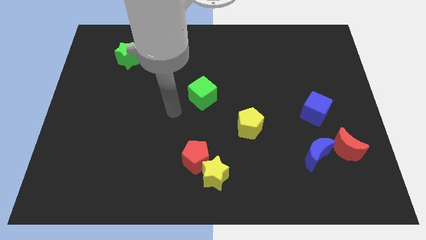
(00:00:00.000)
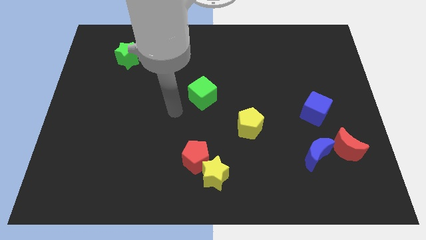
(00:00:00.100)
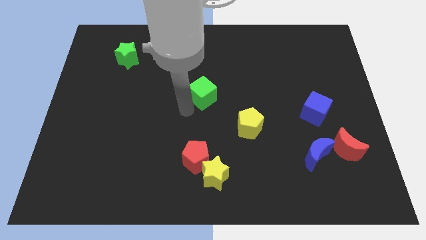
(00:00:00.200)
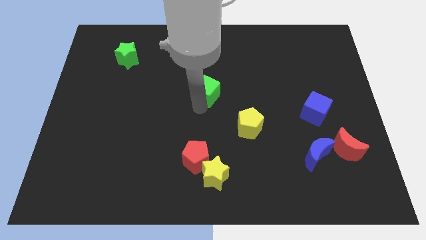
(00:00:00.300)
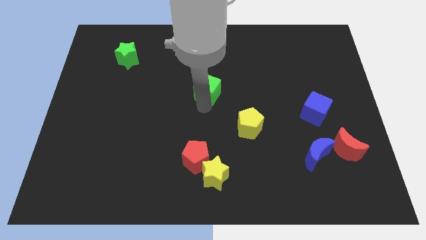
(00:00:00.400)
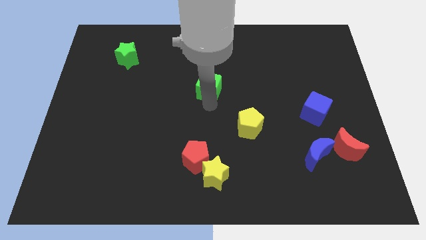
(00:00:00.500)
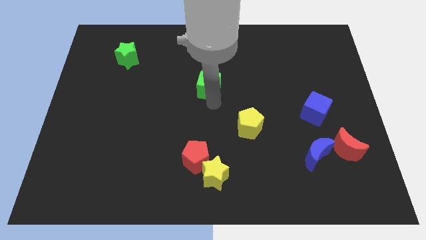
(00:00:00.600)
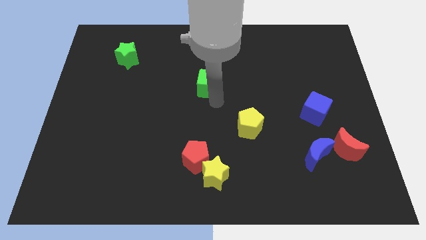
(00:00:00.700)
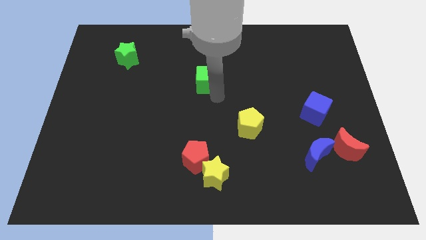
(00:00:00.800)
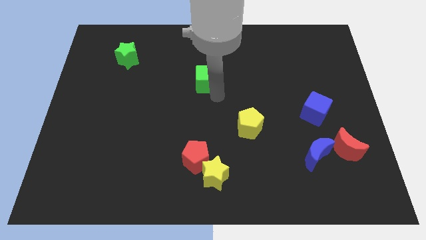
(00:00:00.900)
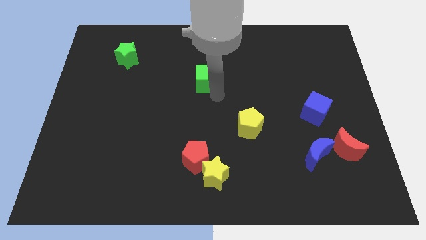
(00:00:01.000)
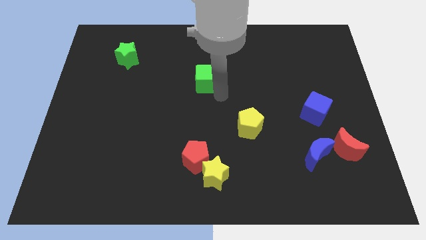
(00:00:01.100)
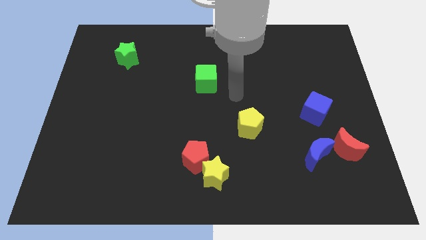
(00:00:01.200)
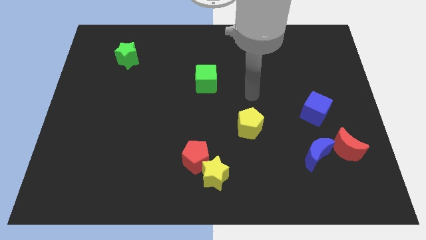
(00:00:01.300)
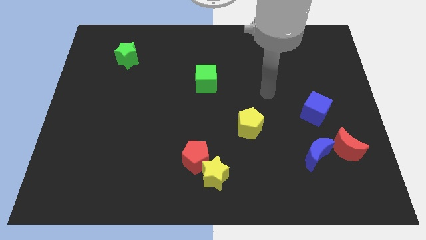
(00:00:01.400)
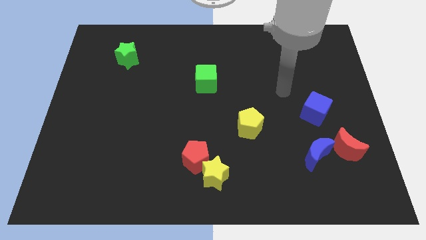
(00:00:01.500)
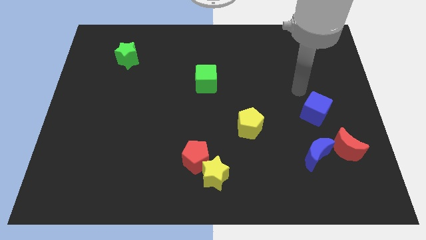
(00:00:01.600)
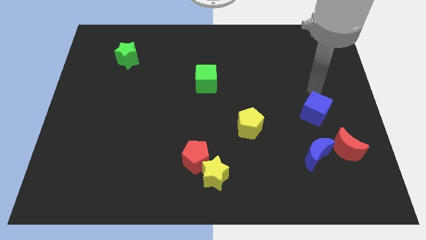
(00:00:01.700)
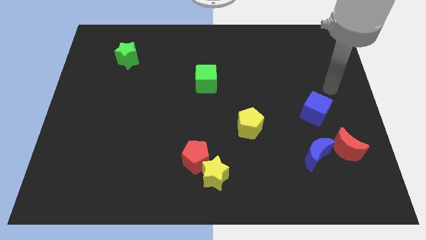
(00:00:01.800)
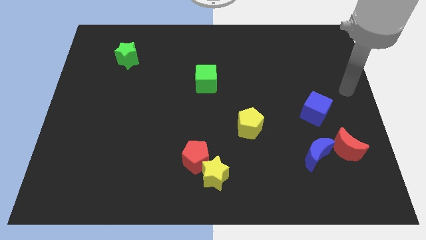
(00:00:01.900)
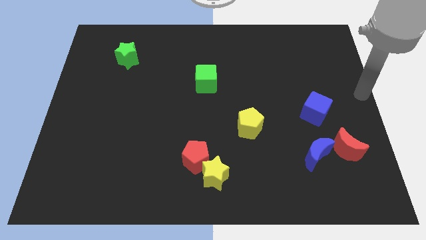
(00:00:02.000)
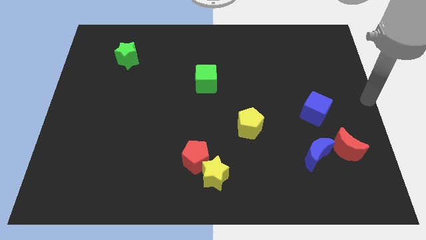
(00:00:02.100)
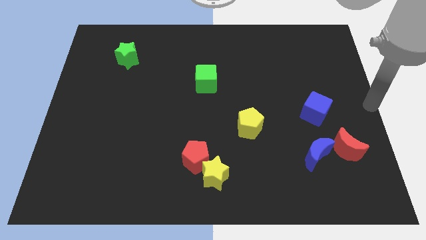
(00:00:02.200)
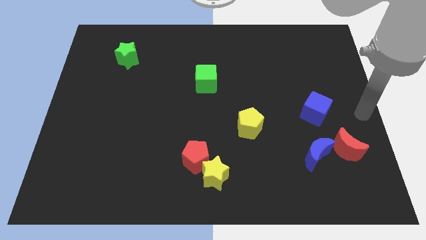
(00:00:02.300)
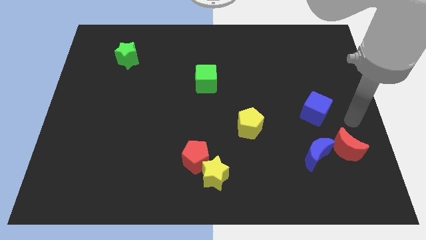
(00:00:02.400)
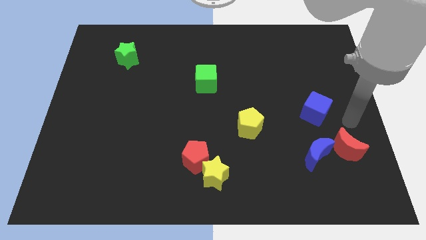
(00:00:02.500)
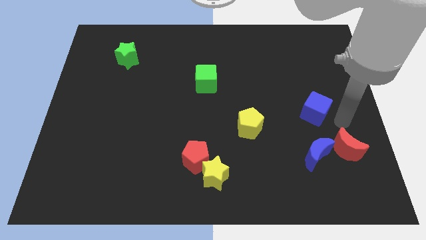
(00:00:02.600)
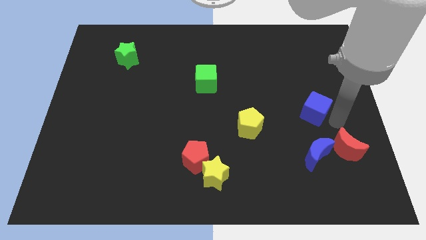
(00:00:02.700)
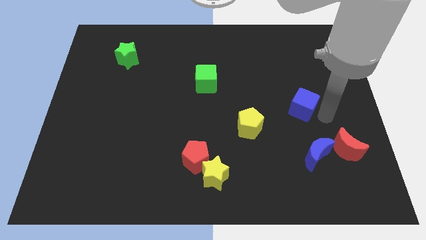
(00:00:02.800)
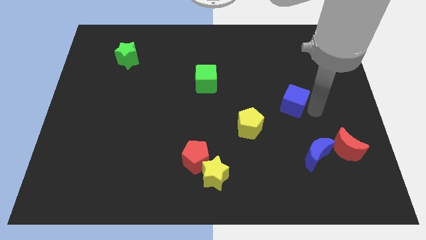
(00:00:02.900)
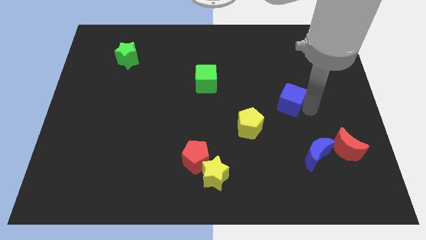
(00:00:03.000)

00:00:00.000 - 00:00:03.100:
move the blue cube slightly to the center

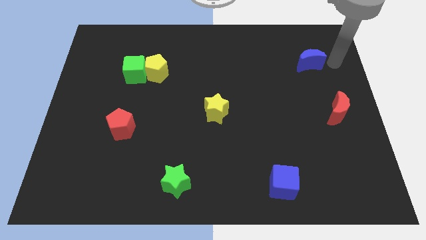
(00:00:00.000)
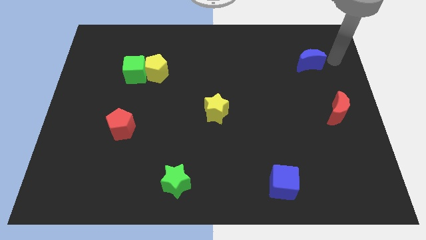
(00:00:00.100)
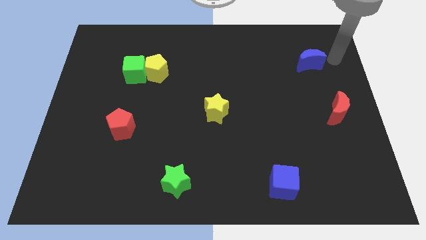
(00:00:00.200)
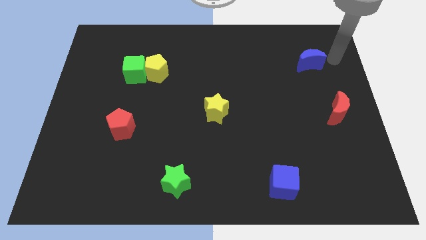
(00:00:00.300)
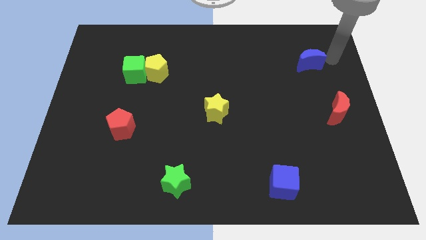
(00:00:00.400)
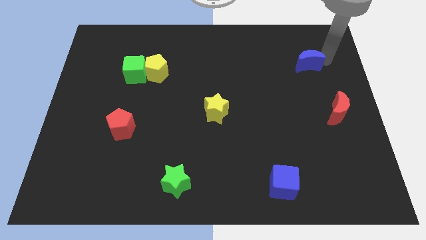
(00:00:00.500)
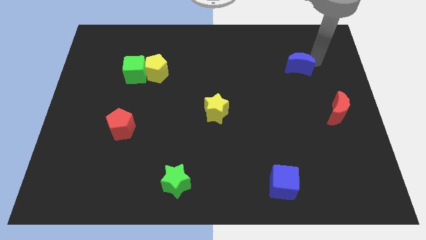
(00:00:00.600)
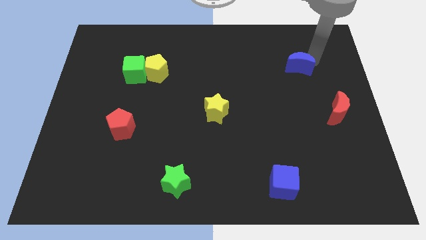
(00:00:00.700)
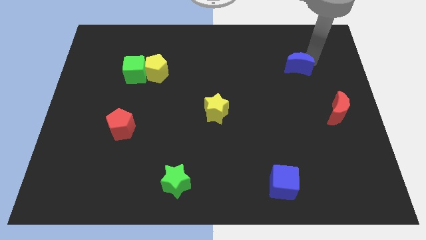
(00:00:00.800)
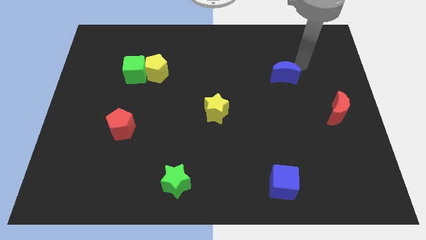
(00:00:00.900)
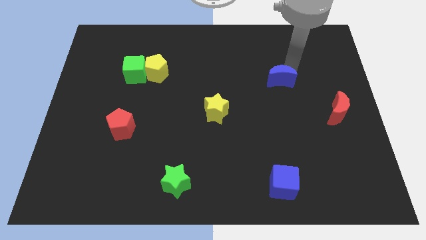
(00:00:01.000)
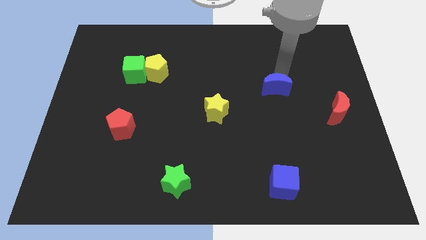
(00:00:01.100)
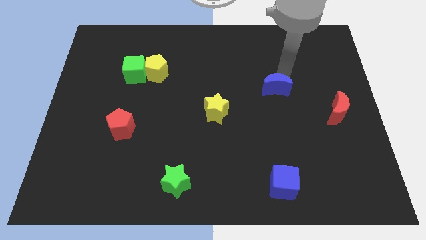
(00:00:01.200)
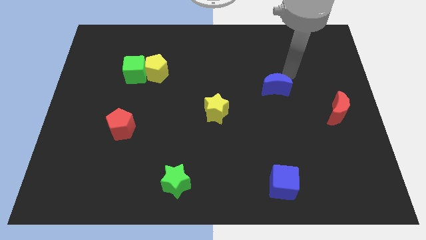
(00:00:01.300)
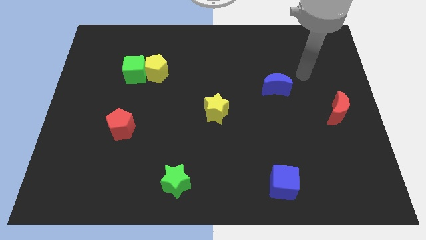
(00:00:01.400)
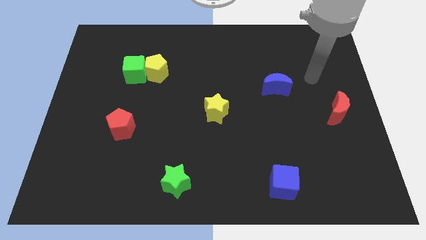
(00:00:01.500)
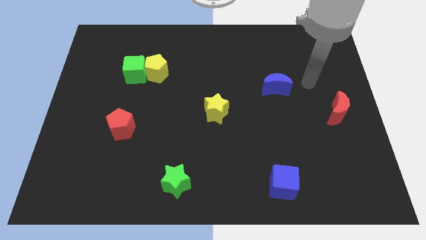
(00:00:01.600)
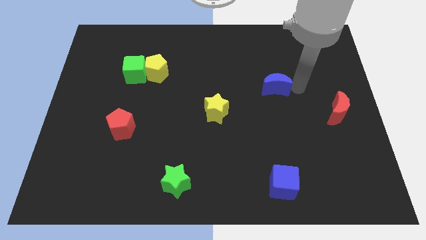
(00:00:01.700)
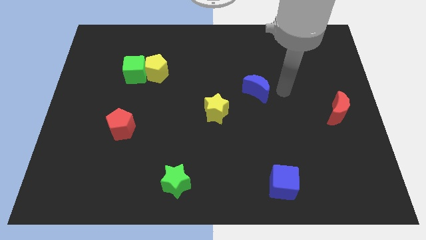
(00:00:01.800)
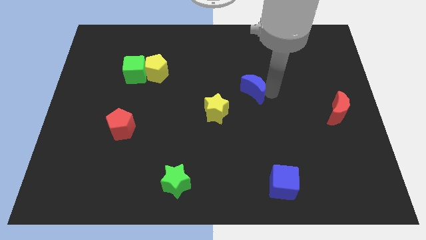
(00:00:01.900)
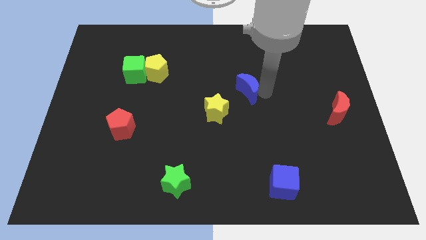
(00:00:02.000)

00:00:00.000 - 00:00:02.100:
push the blue moon towards the middle of the board

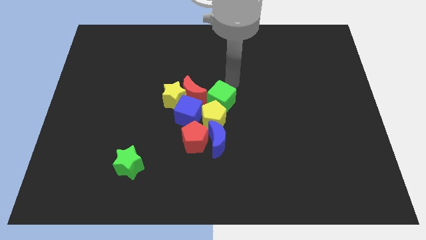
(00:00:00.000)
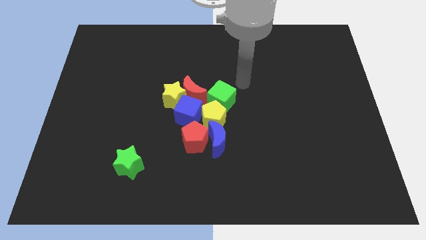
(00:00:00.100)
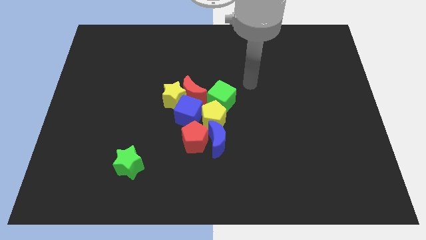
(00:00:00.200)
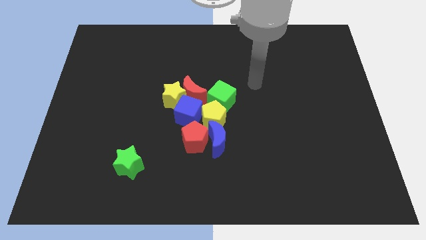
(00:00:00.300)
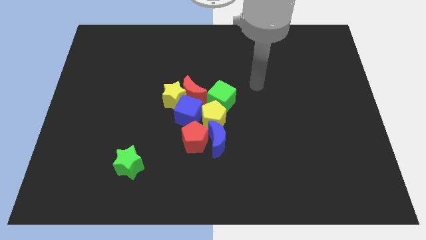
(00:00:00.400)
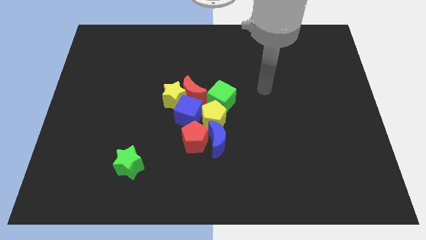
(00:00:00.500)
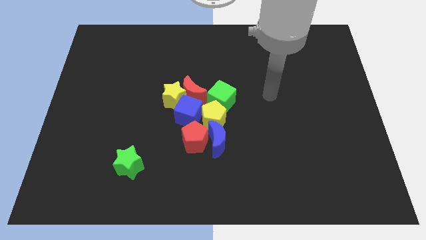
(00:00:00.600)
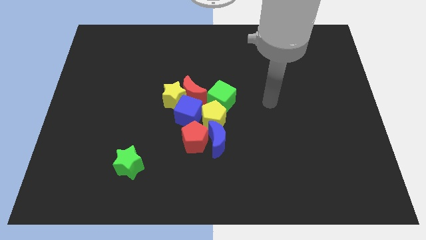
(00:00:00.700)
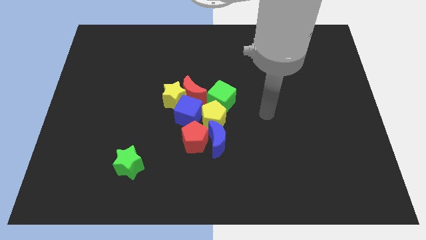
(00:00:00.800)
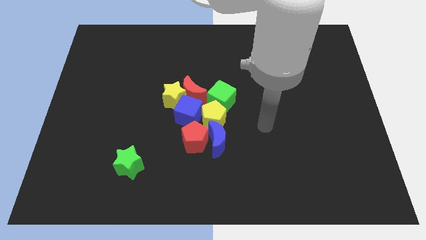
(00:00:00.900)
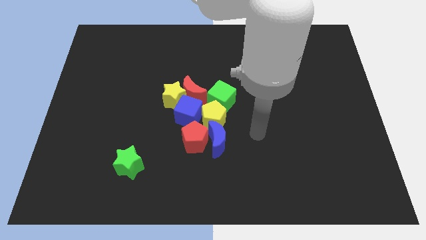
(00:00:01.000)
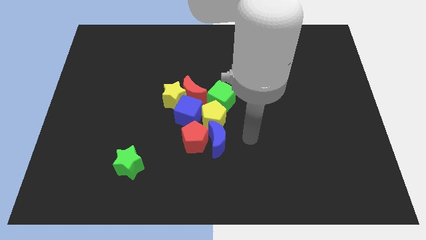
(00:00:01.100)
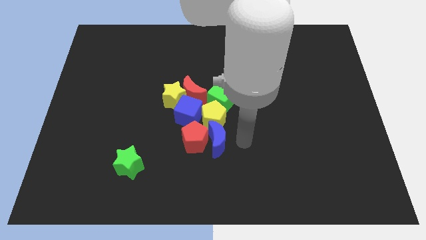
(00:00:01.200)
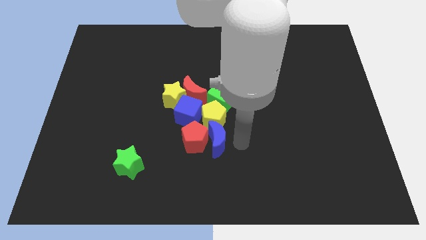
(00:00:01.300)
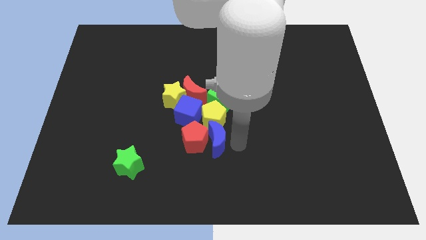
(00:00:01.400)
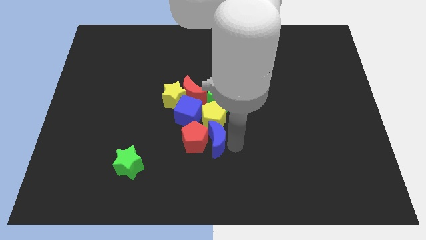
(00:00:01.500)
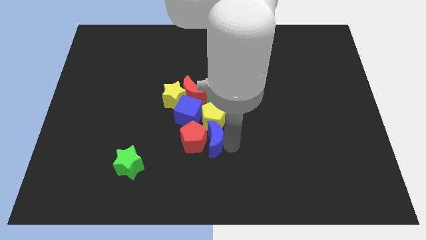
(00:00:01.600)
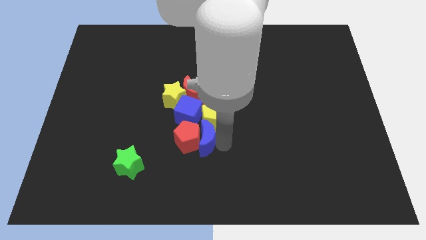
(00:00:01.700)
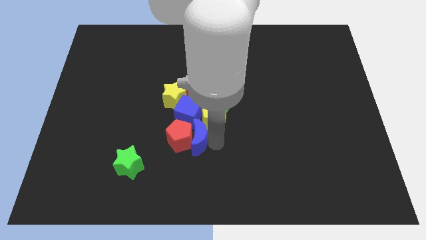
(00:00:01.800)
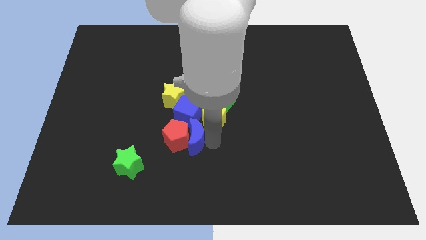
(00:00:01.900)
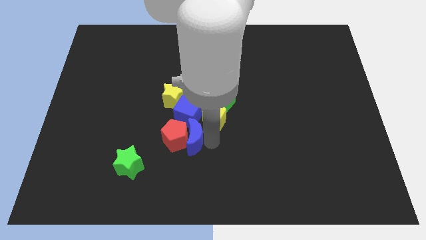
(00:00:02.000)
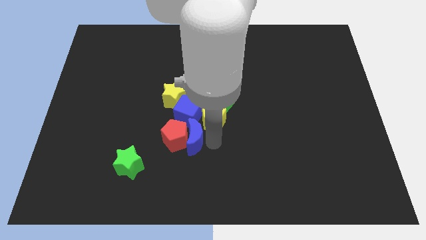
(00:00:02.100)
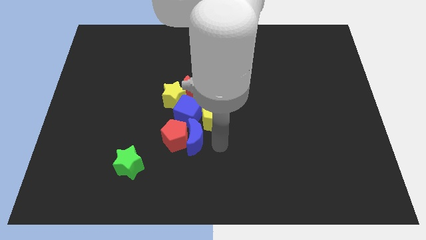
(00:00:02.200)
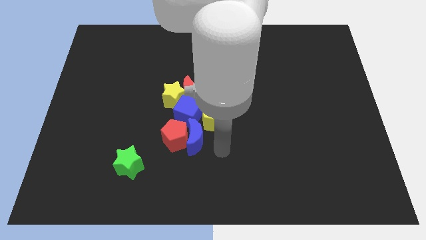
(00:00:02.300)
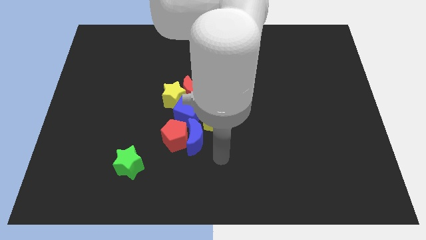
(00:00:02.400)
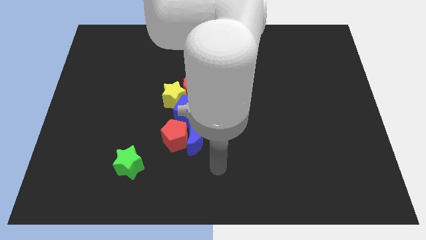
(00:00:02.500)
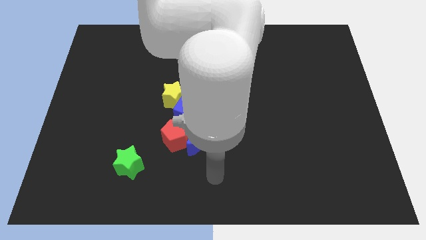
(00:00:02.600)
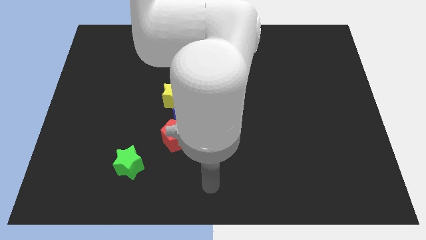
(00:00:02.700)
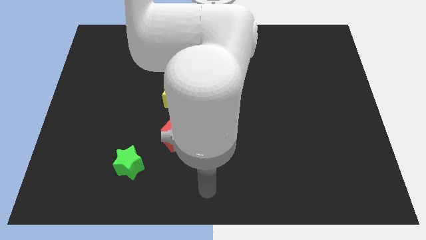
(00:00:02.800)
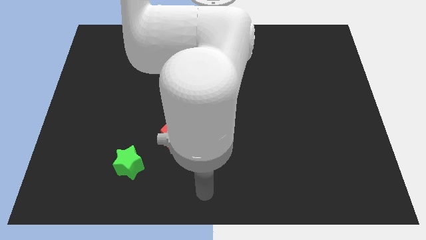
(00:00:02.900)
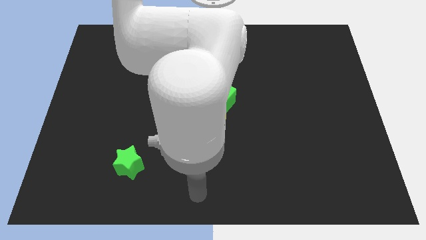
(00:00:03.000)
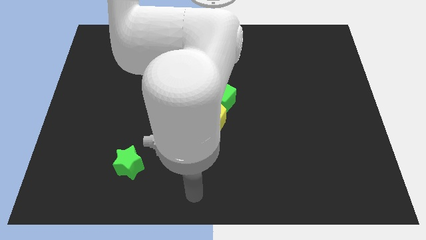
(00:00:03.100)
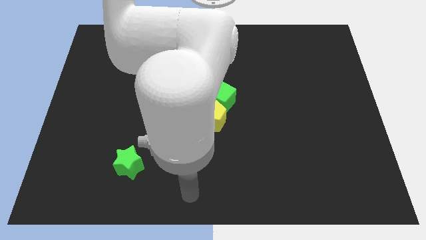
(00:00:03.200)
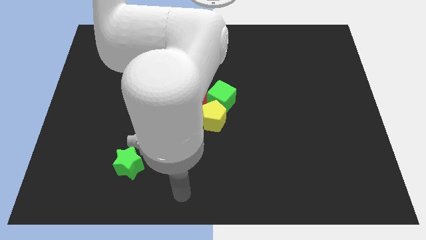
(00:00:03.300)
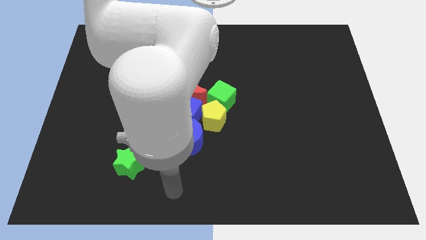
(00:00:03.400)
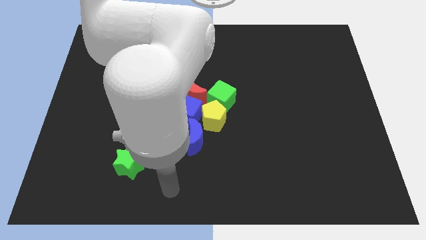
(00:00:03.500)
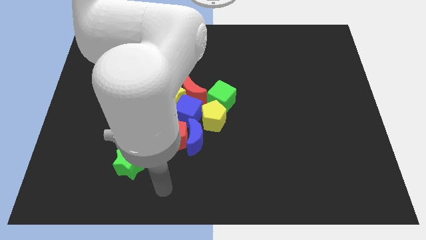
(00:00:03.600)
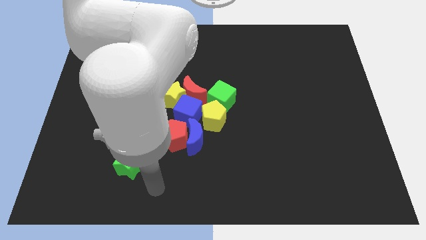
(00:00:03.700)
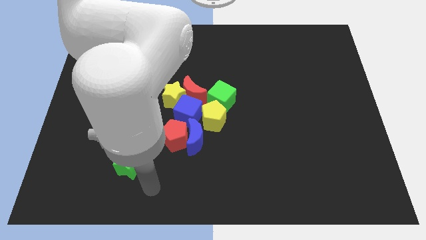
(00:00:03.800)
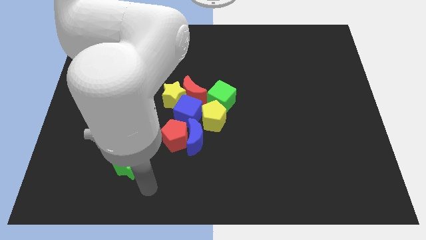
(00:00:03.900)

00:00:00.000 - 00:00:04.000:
move blue moon below the blue cube
